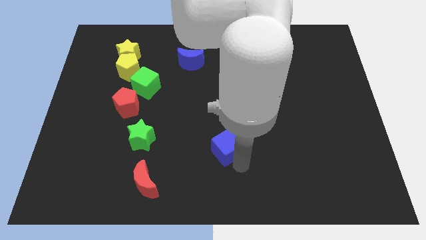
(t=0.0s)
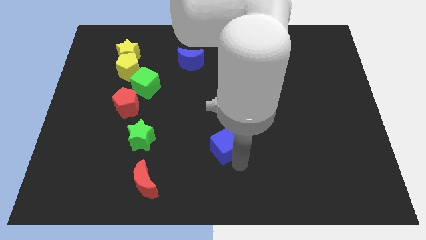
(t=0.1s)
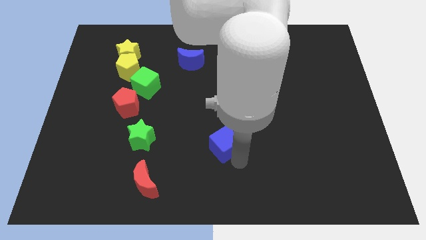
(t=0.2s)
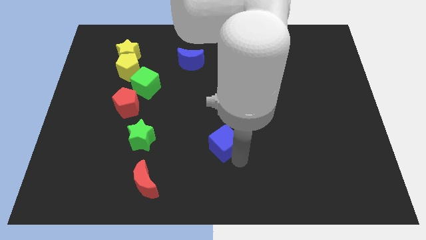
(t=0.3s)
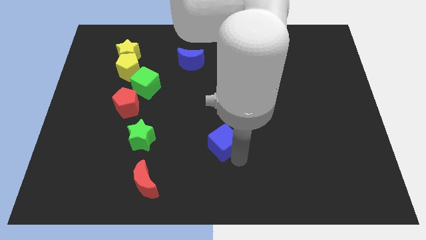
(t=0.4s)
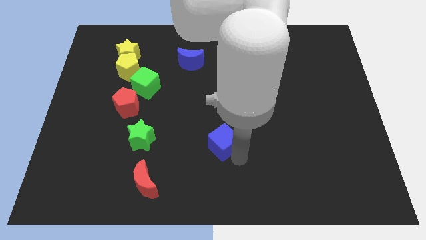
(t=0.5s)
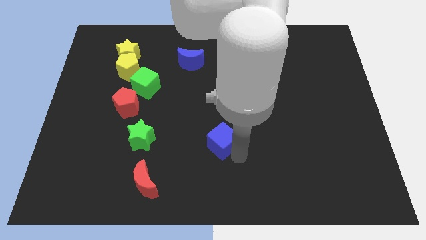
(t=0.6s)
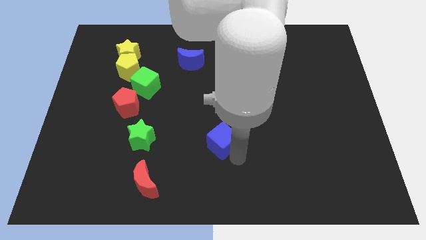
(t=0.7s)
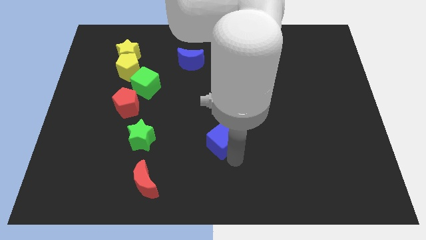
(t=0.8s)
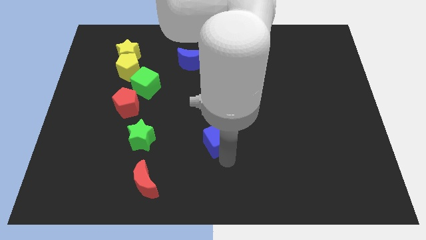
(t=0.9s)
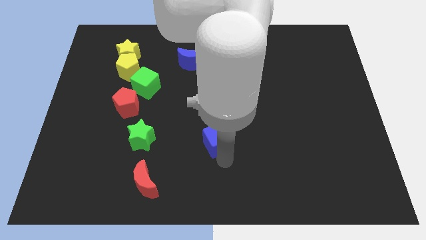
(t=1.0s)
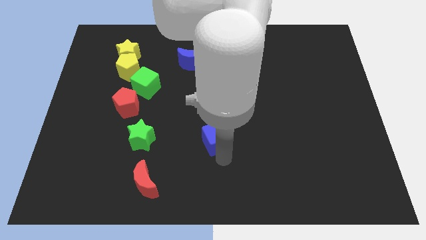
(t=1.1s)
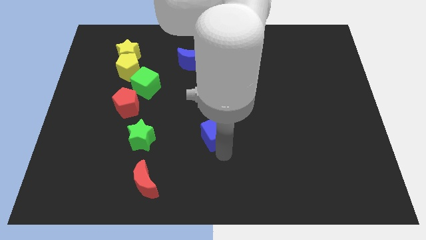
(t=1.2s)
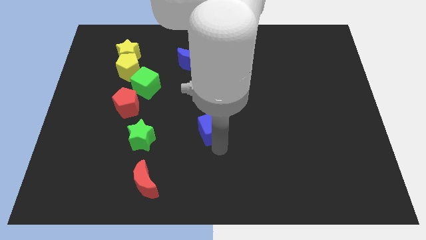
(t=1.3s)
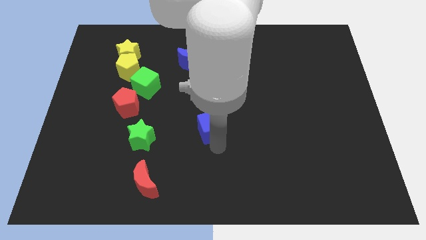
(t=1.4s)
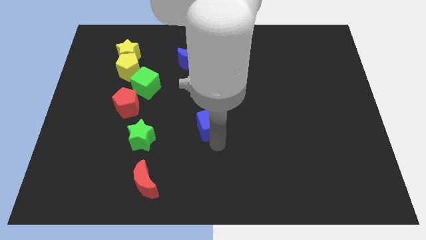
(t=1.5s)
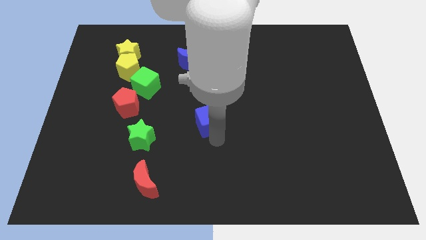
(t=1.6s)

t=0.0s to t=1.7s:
push the blue cube towards the center of the board

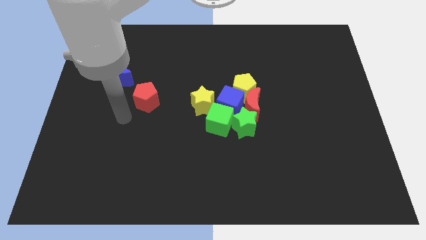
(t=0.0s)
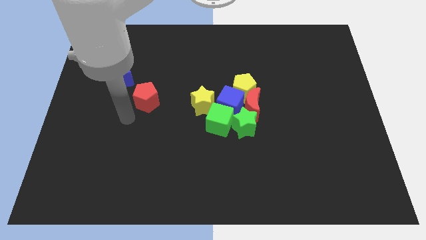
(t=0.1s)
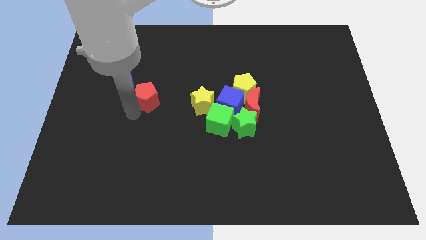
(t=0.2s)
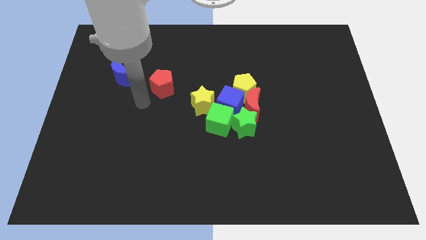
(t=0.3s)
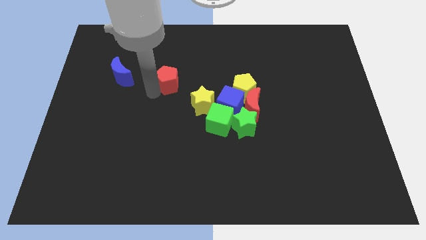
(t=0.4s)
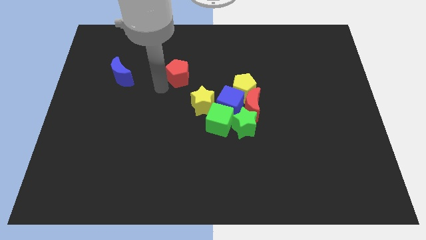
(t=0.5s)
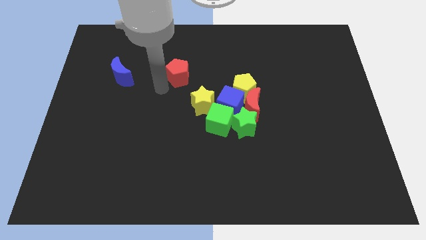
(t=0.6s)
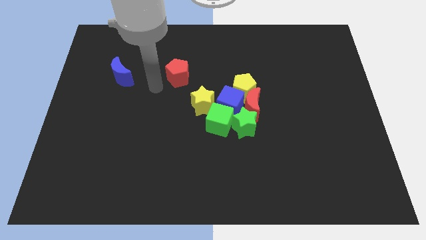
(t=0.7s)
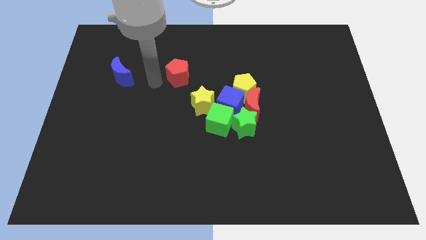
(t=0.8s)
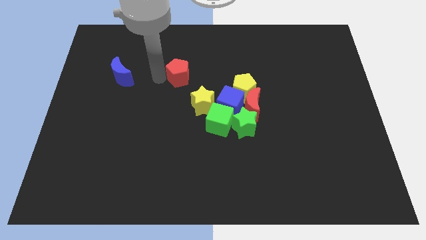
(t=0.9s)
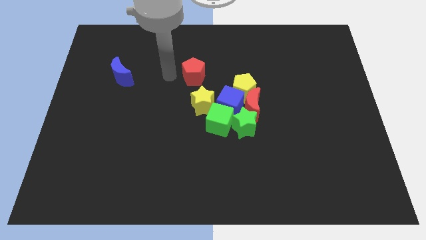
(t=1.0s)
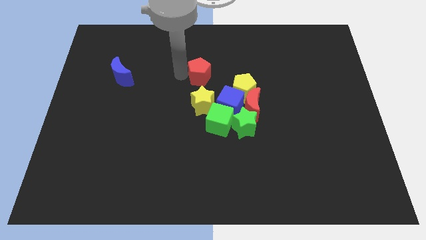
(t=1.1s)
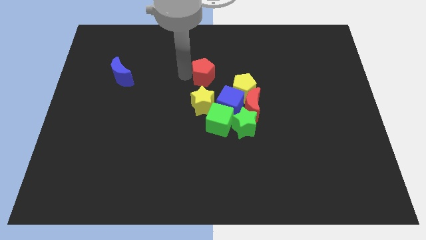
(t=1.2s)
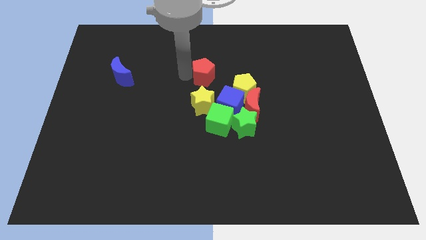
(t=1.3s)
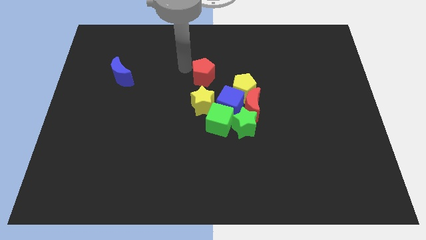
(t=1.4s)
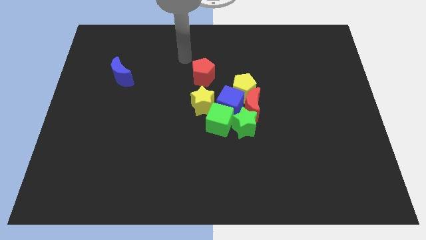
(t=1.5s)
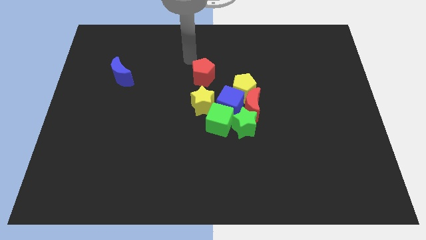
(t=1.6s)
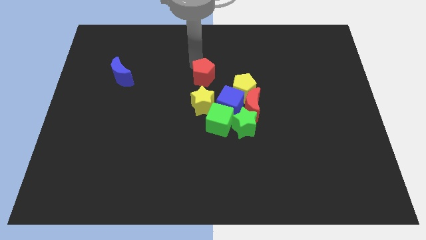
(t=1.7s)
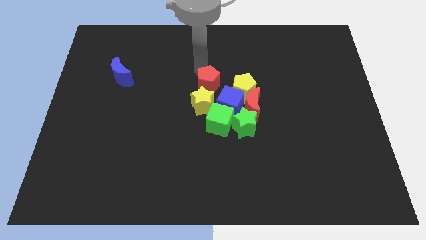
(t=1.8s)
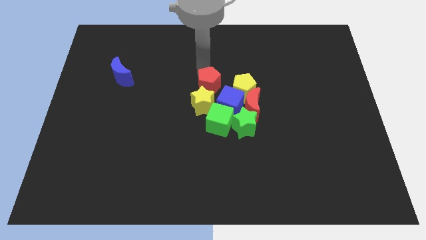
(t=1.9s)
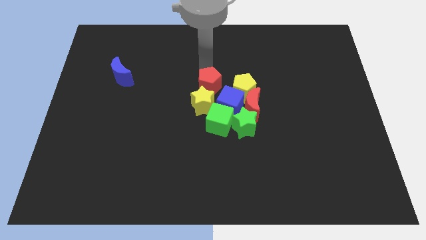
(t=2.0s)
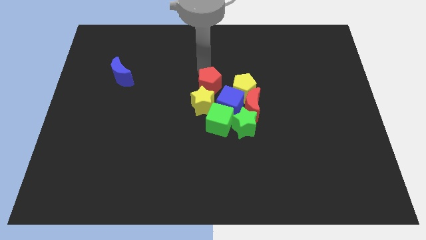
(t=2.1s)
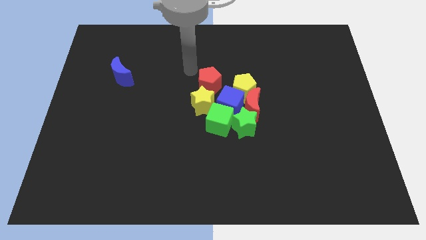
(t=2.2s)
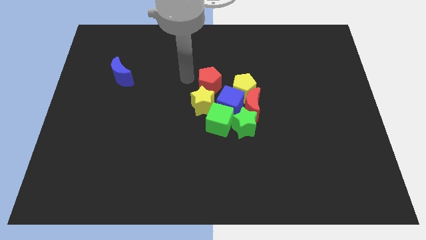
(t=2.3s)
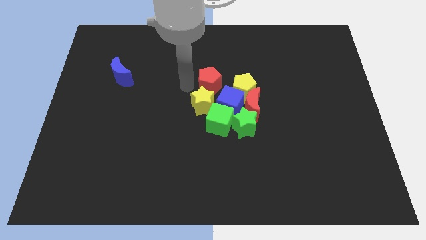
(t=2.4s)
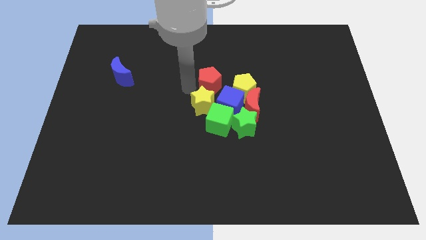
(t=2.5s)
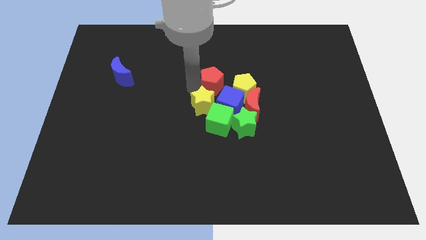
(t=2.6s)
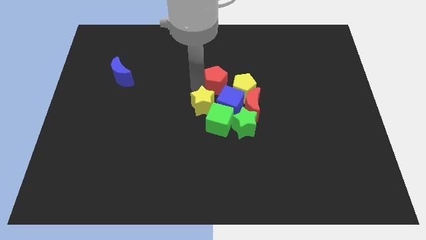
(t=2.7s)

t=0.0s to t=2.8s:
move the red pentagon to the center

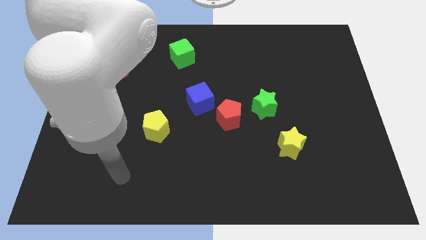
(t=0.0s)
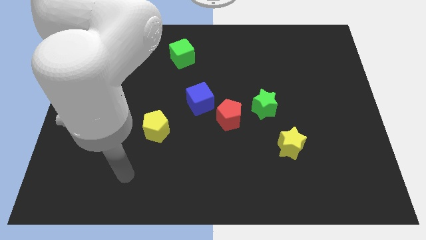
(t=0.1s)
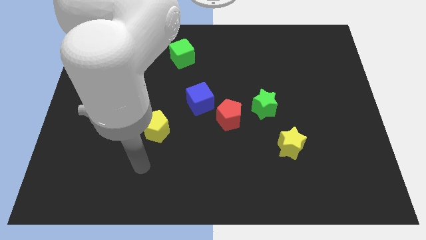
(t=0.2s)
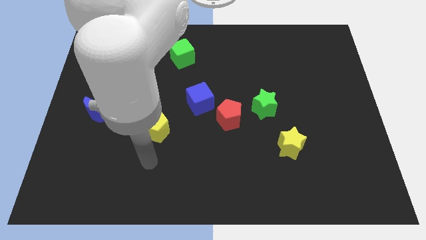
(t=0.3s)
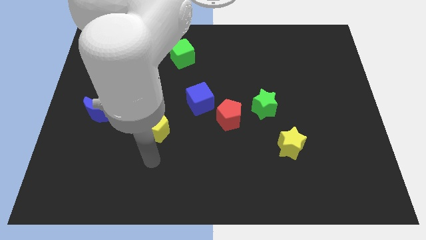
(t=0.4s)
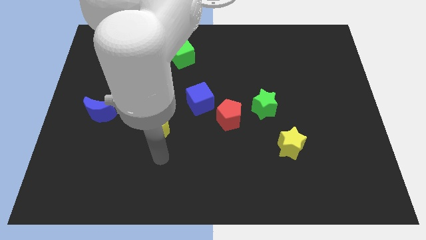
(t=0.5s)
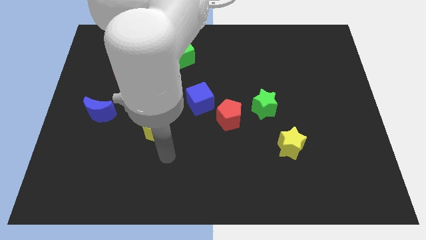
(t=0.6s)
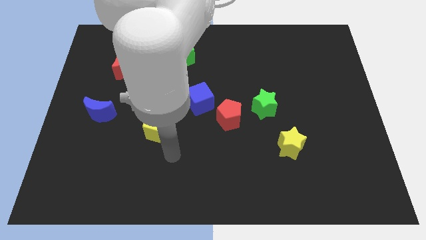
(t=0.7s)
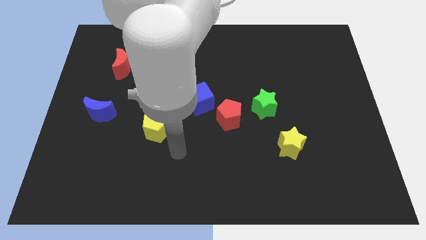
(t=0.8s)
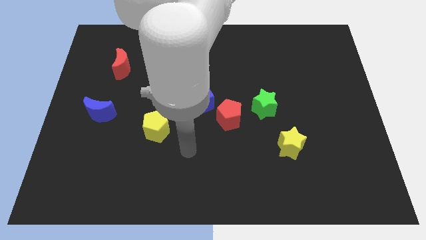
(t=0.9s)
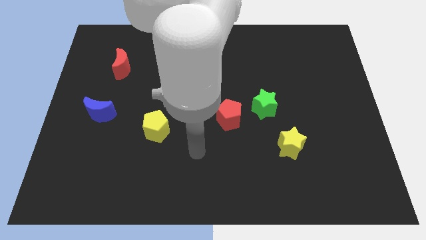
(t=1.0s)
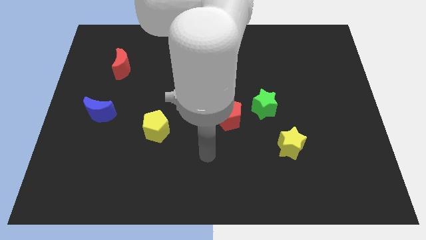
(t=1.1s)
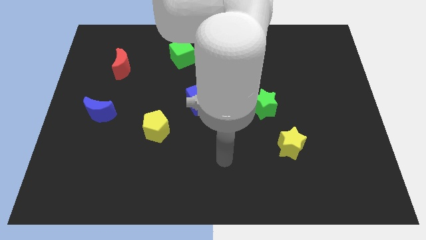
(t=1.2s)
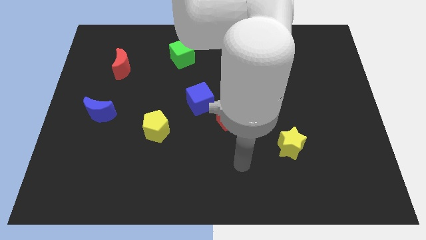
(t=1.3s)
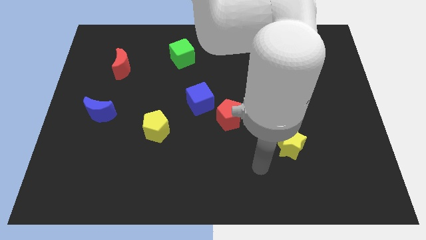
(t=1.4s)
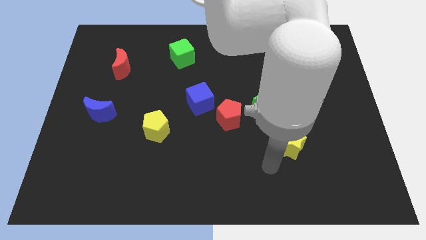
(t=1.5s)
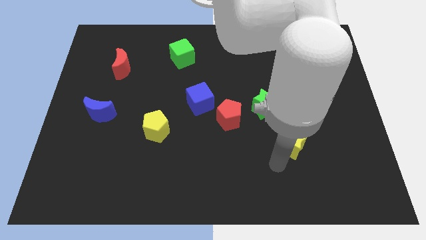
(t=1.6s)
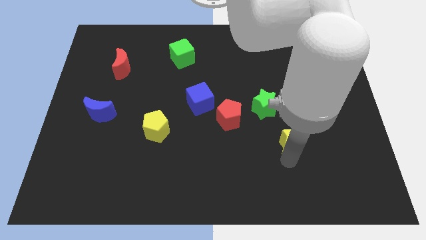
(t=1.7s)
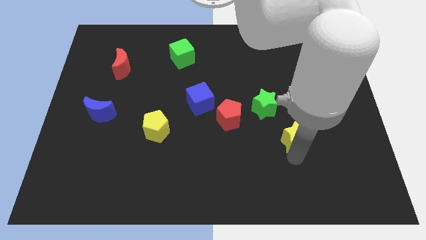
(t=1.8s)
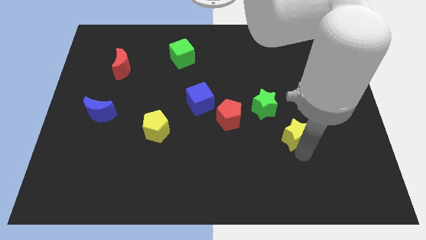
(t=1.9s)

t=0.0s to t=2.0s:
move the arm towards the yellow star

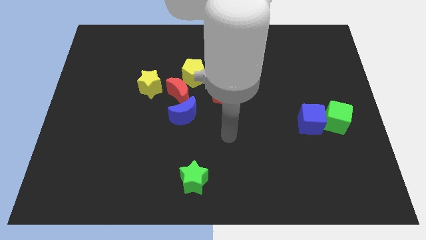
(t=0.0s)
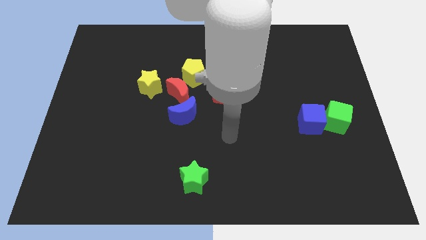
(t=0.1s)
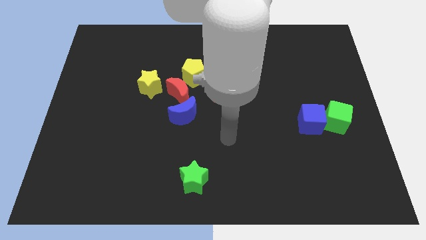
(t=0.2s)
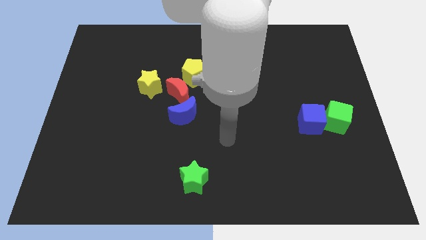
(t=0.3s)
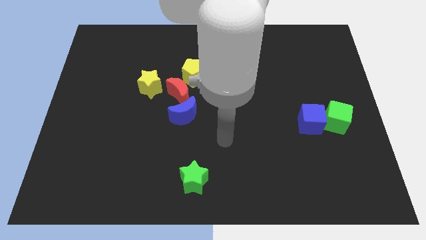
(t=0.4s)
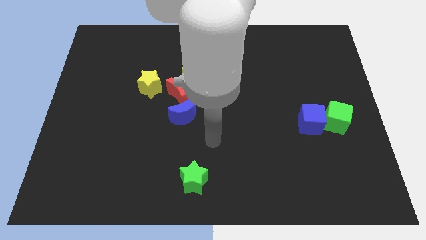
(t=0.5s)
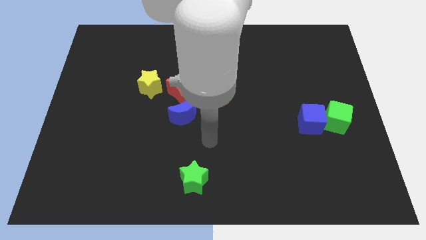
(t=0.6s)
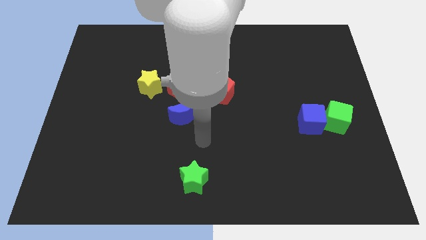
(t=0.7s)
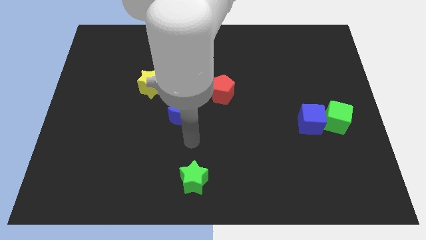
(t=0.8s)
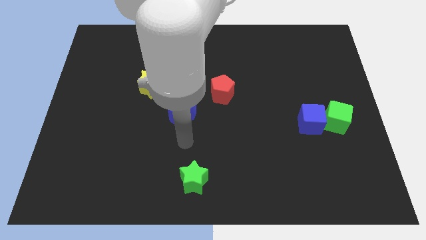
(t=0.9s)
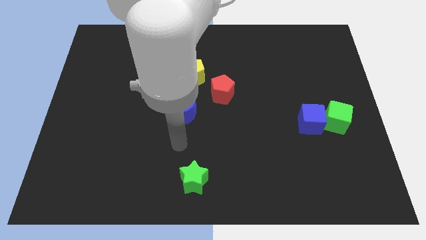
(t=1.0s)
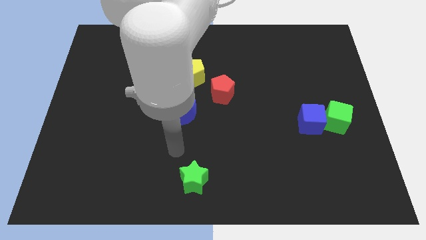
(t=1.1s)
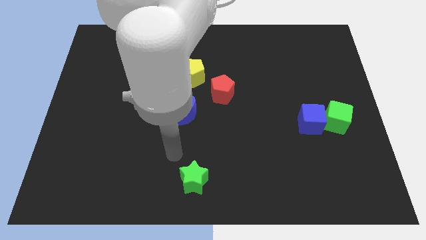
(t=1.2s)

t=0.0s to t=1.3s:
push your arm to the top left of the green star

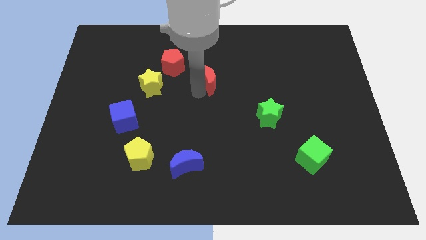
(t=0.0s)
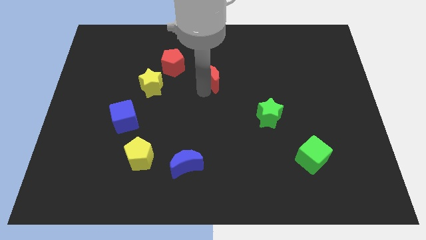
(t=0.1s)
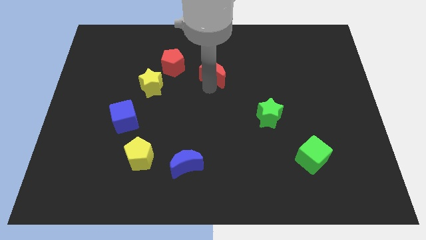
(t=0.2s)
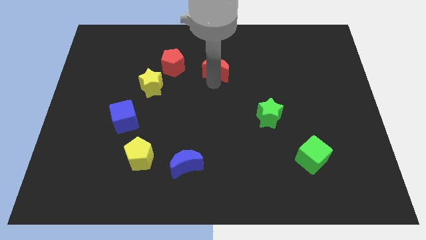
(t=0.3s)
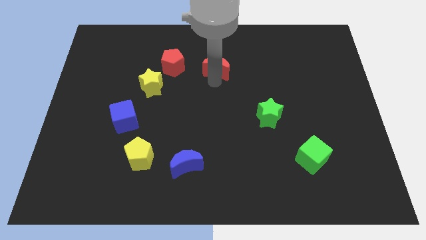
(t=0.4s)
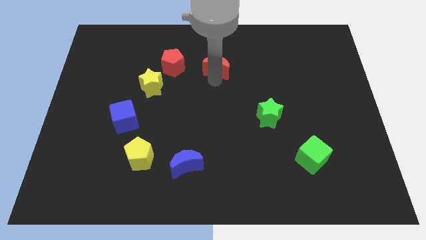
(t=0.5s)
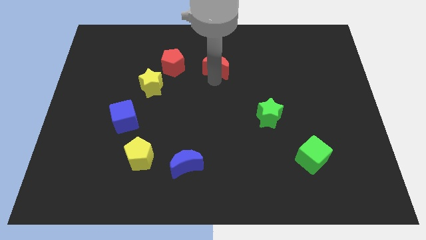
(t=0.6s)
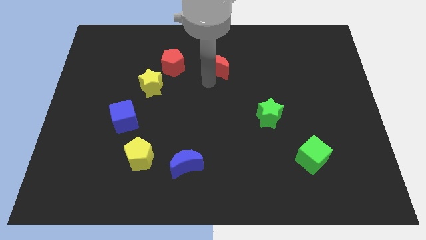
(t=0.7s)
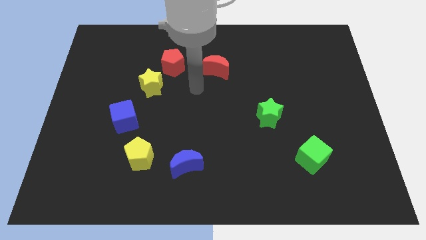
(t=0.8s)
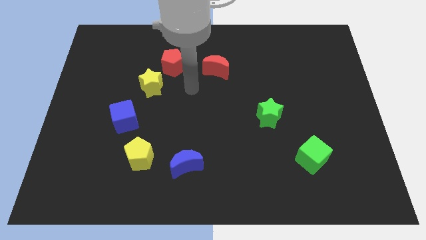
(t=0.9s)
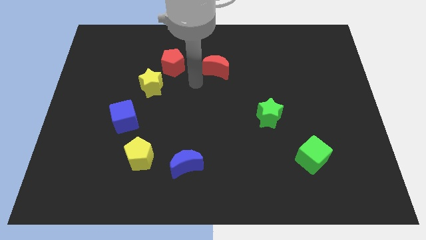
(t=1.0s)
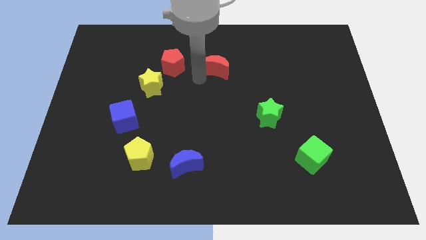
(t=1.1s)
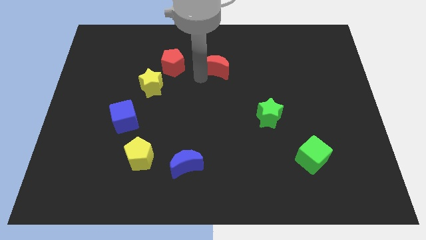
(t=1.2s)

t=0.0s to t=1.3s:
slide red crescent slightly to the top
